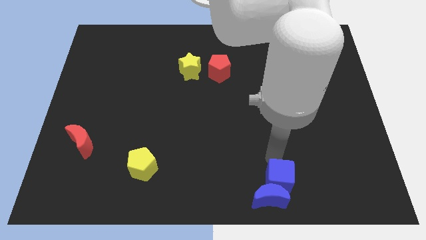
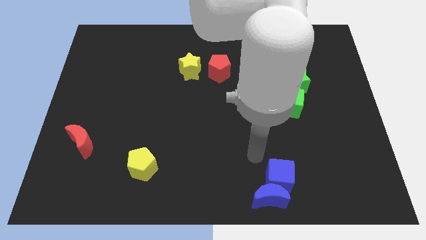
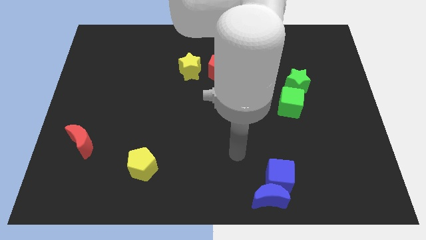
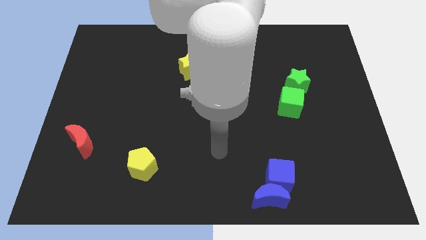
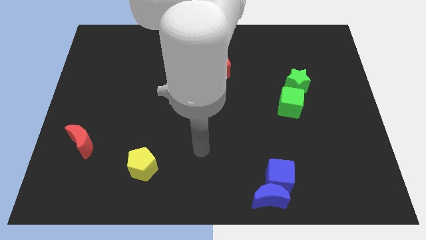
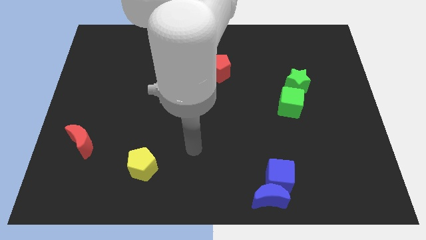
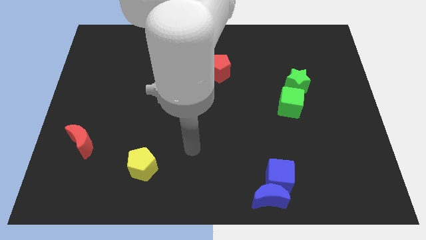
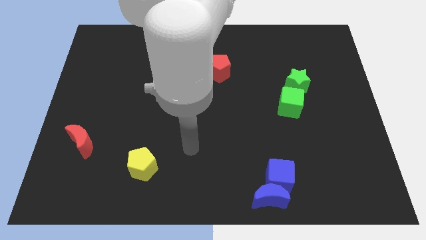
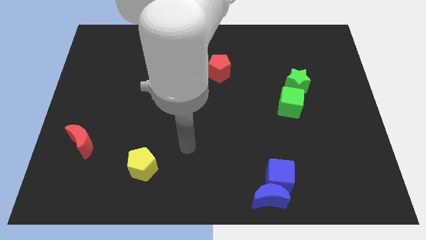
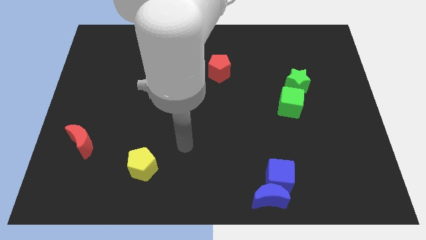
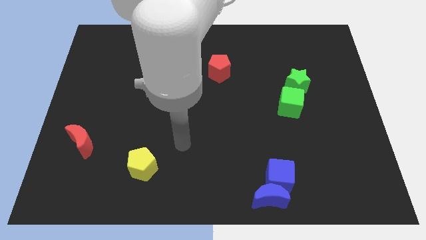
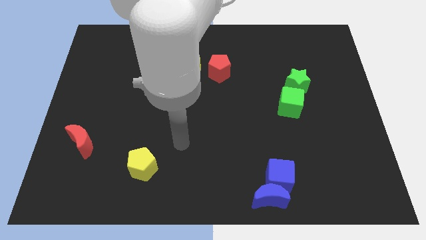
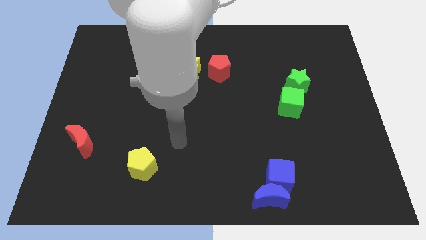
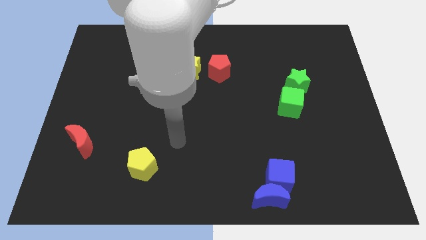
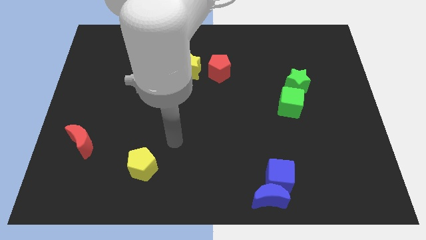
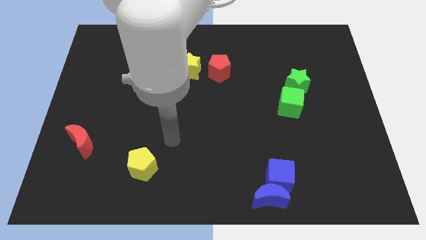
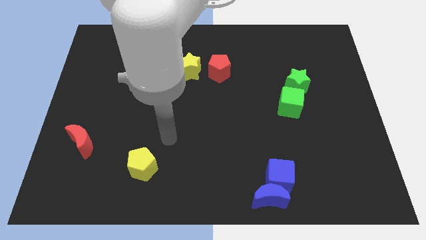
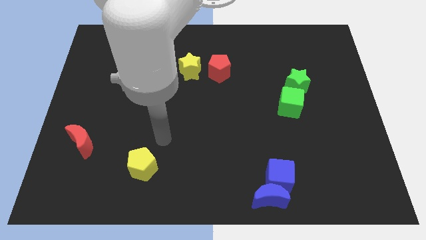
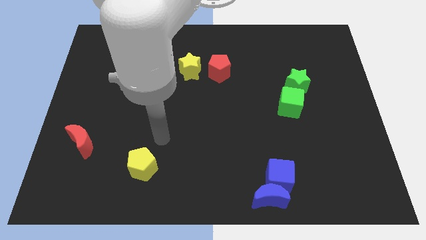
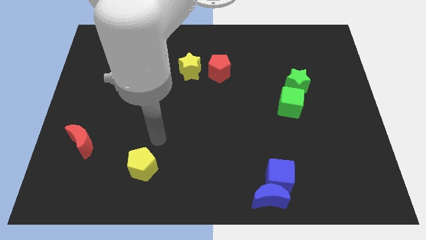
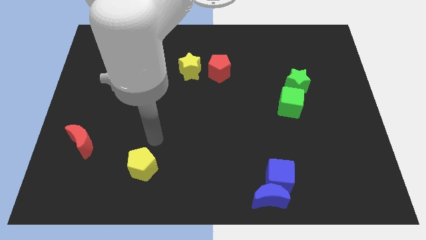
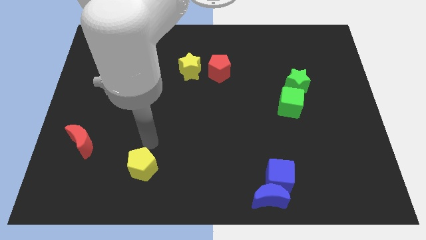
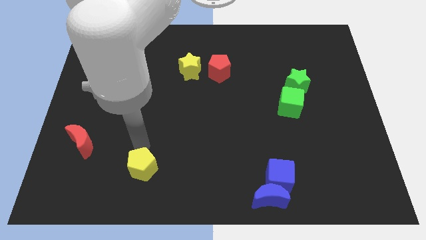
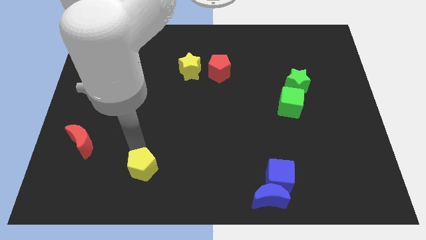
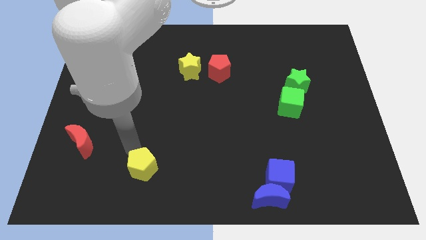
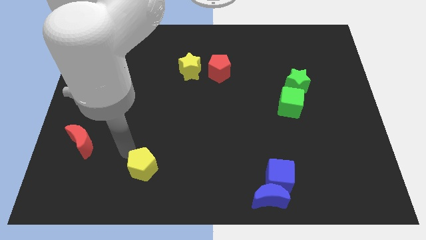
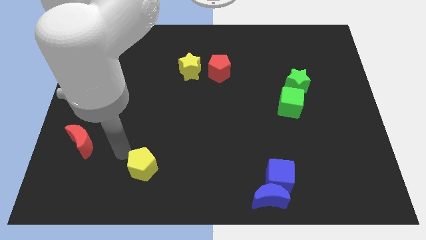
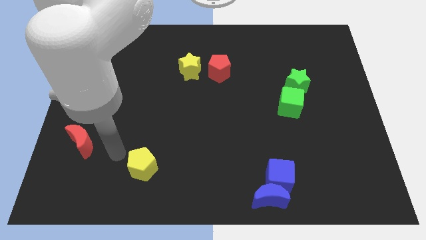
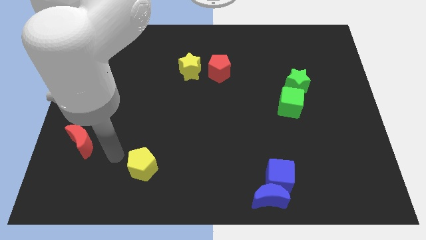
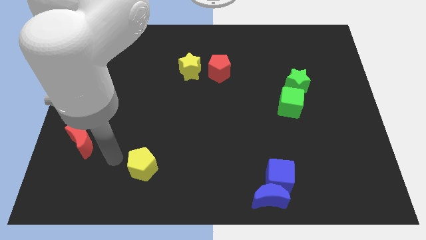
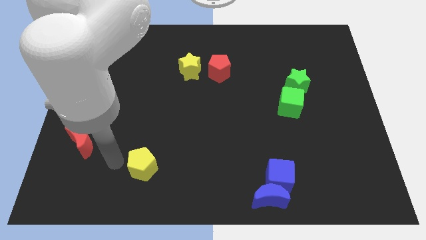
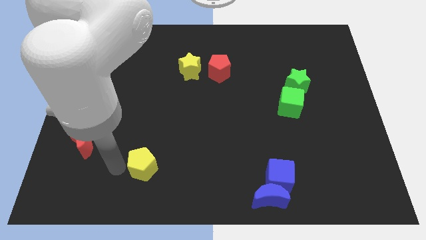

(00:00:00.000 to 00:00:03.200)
move your arm to the left side of the yellow pentagon

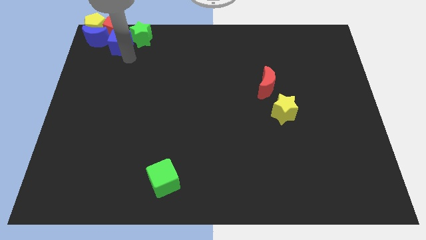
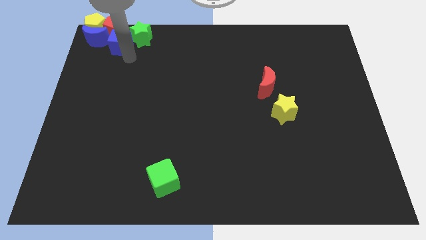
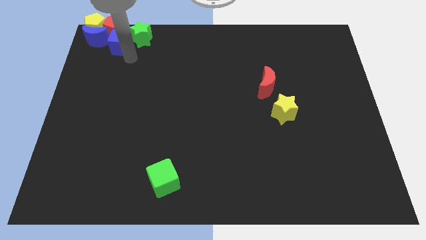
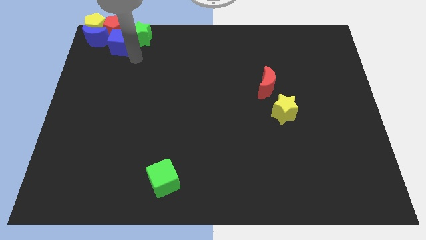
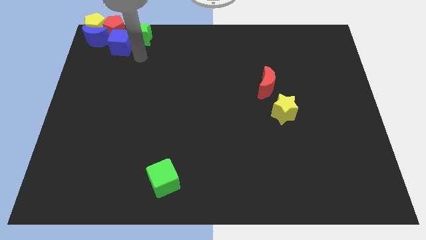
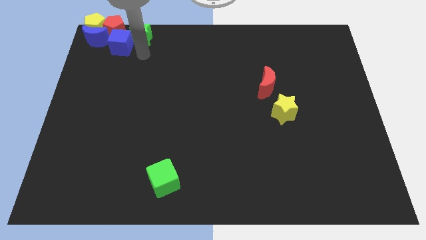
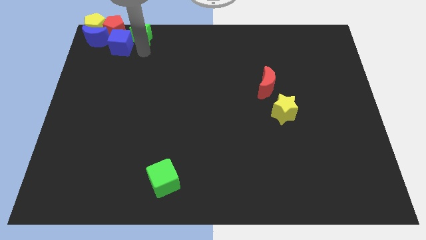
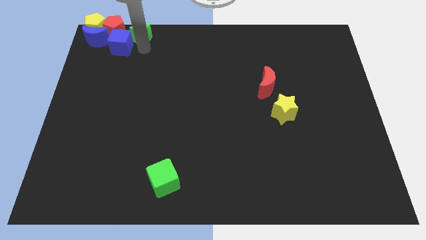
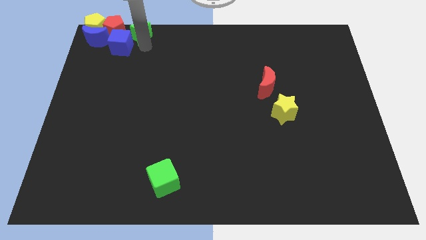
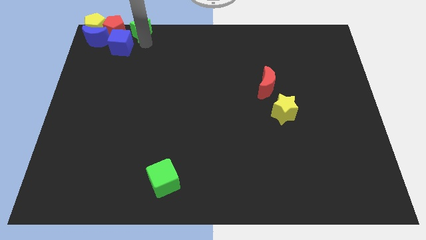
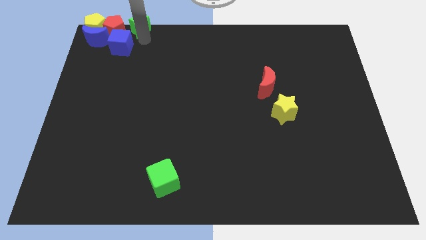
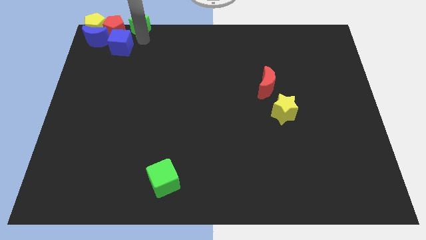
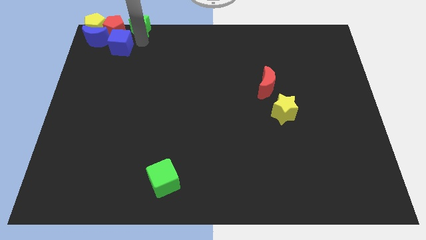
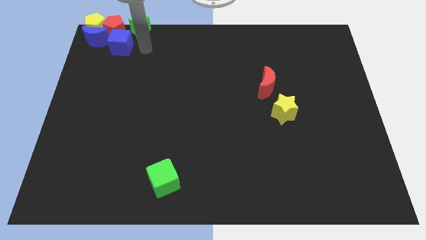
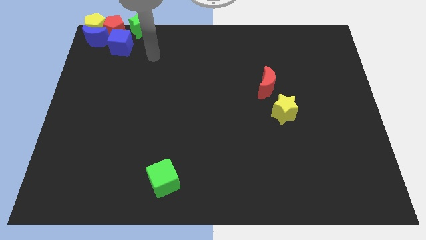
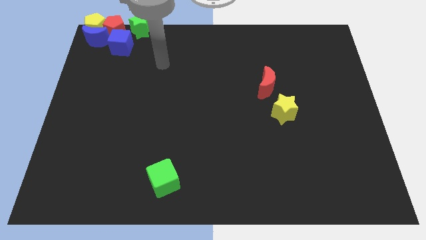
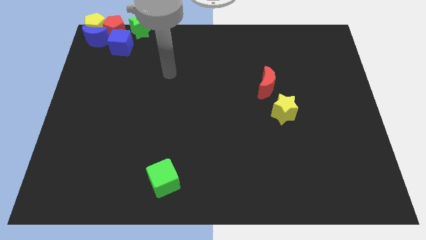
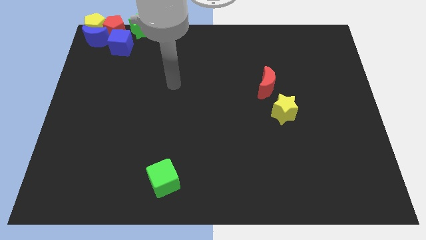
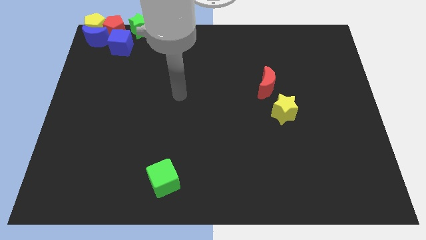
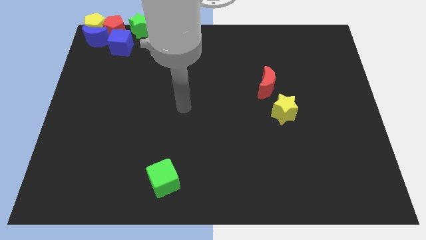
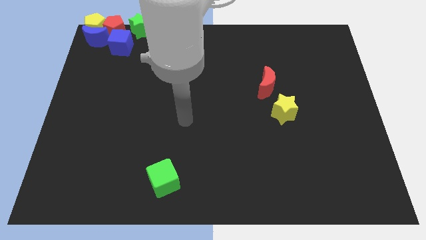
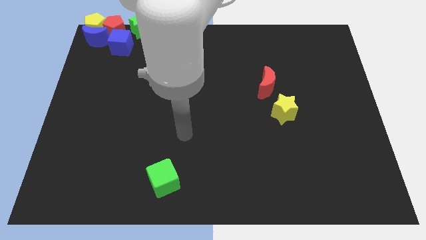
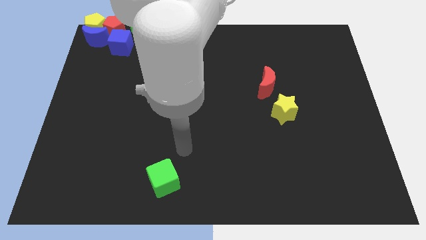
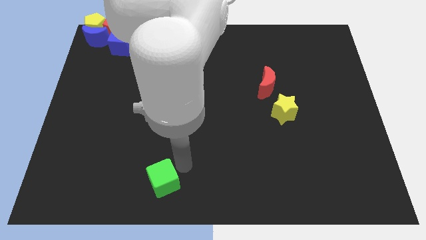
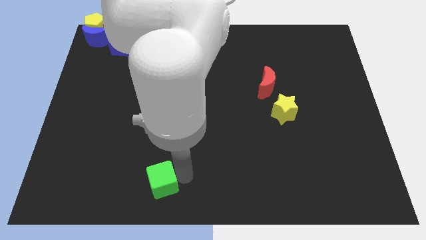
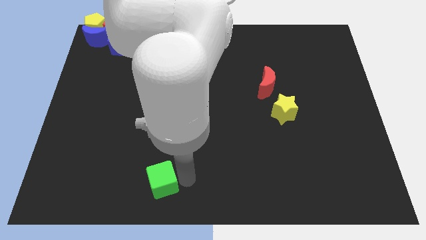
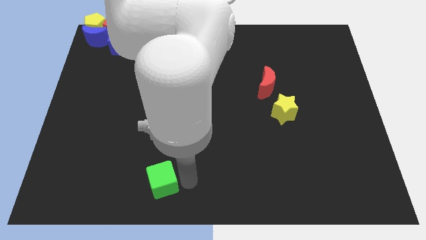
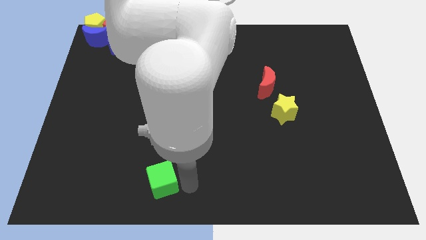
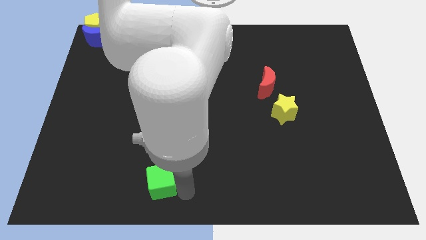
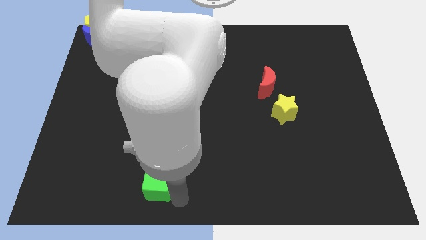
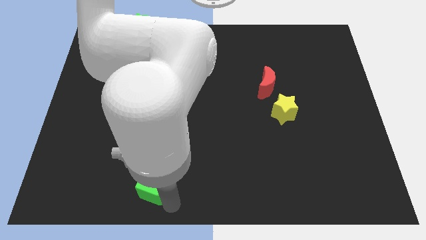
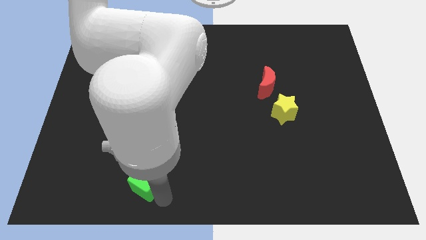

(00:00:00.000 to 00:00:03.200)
move your arm towards the green cube

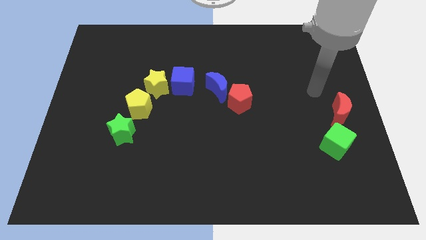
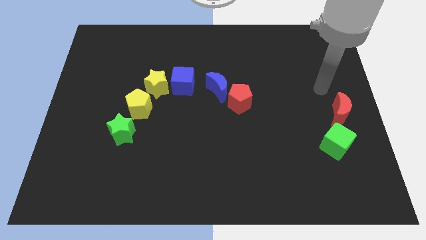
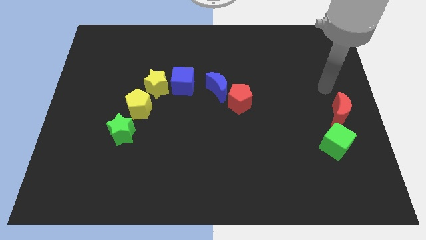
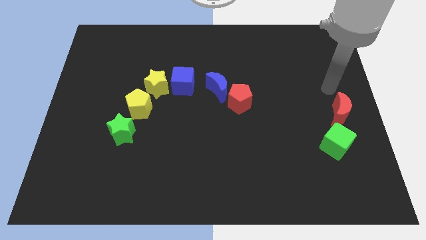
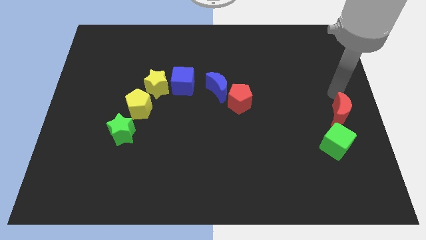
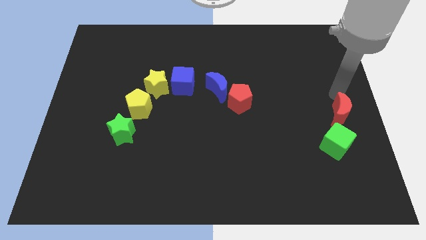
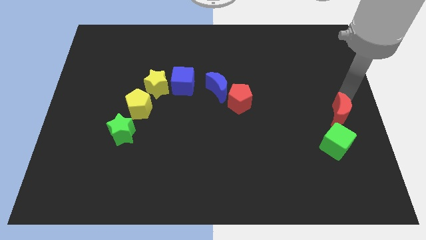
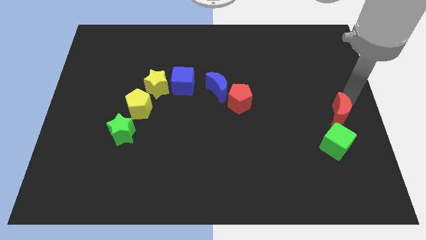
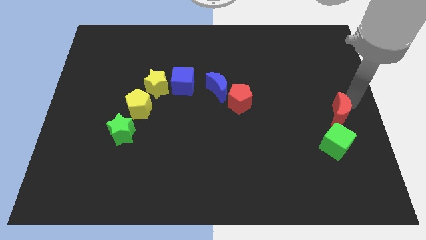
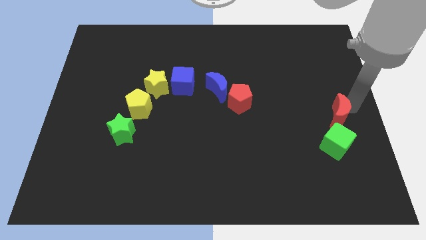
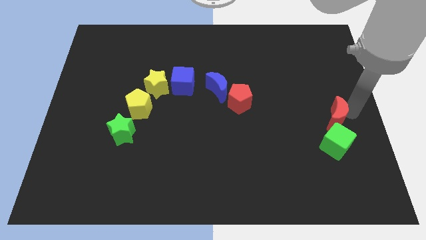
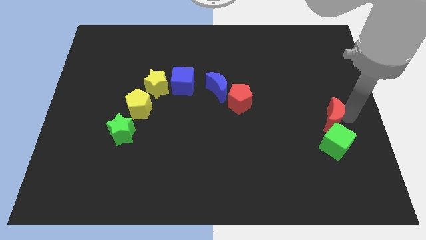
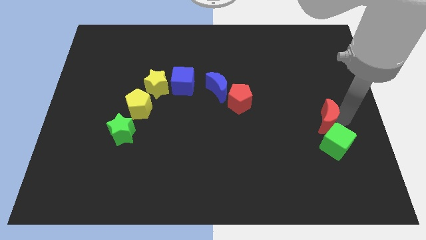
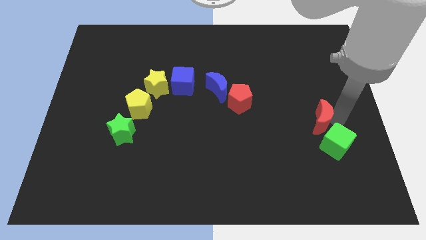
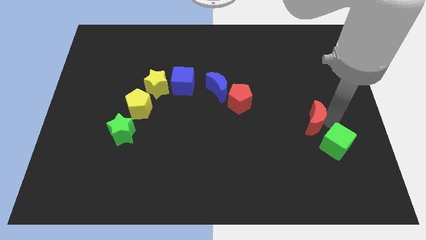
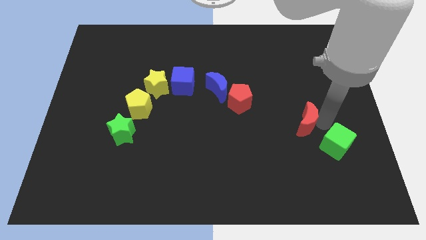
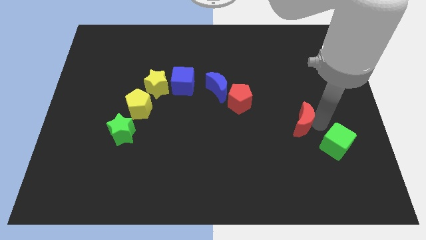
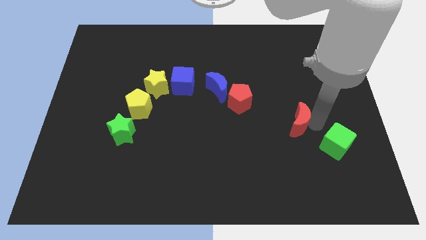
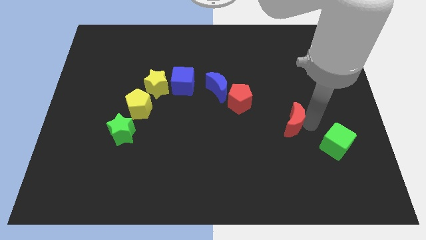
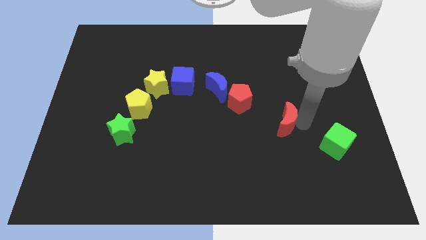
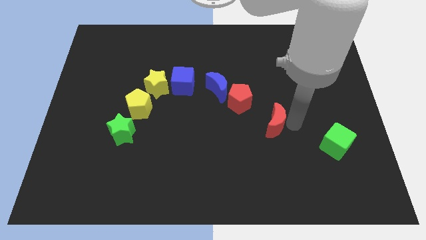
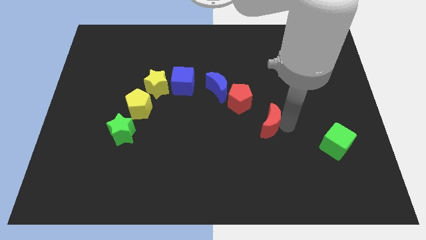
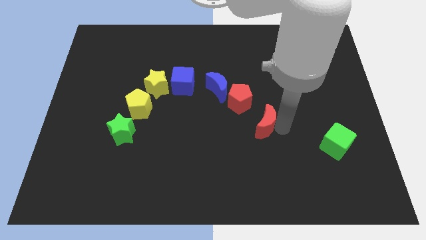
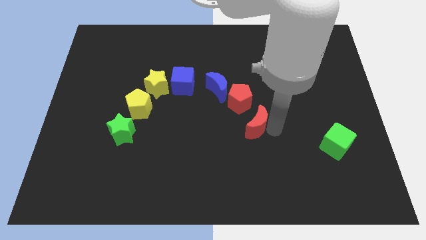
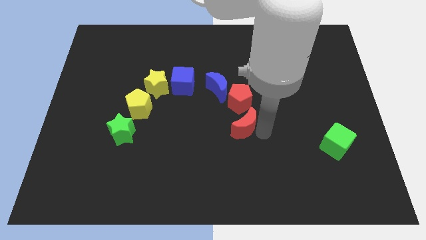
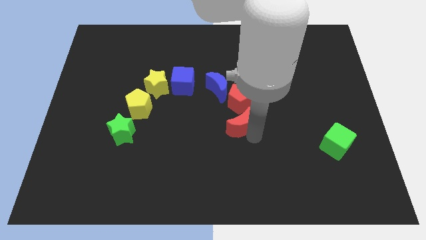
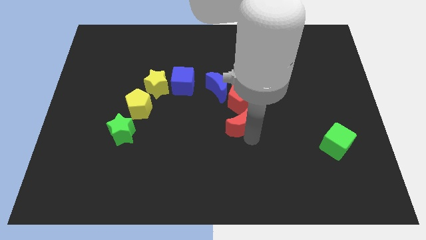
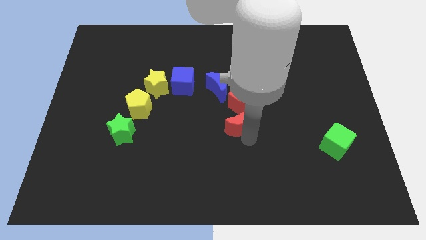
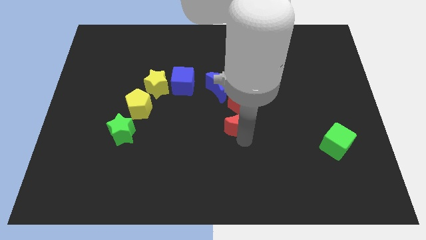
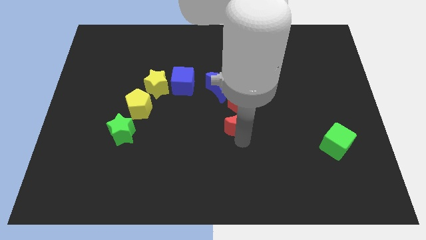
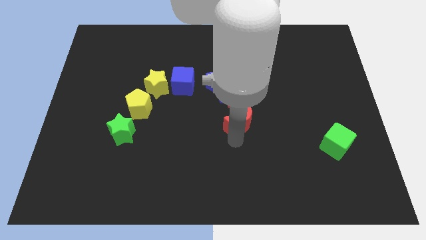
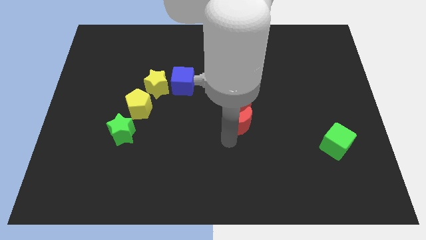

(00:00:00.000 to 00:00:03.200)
place the red crescent below the red pentagon
